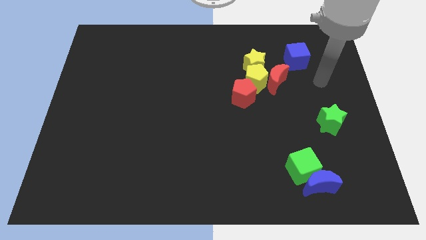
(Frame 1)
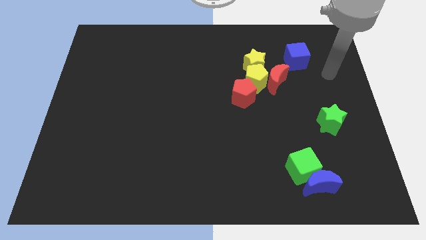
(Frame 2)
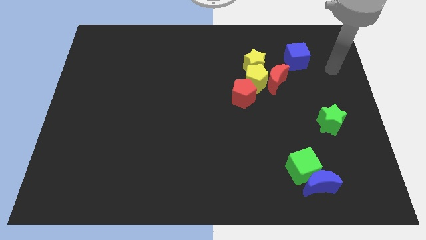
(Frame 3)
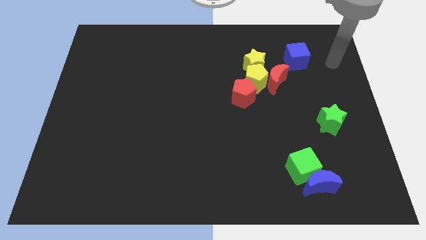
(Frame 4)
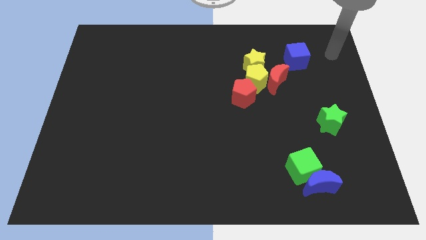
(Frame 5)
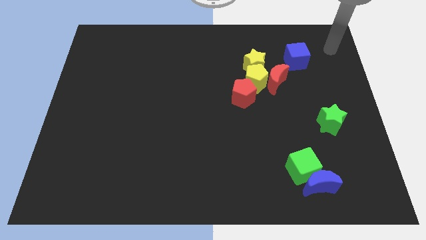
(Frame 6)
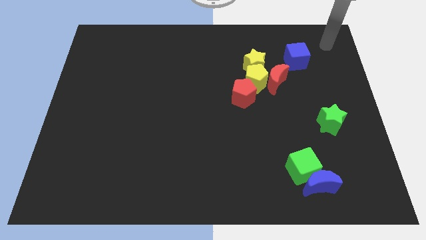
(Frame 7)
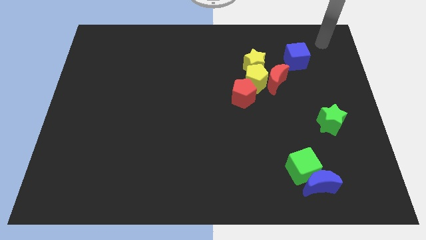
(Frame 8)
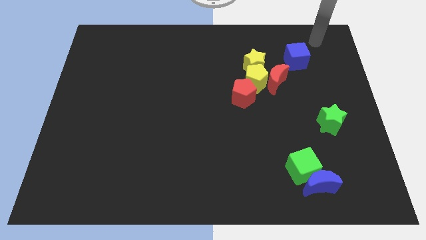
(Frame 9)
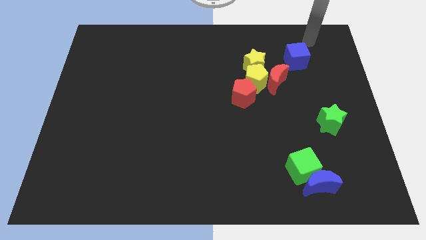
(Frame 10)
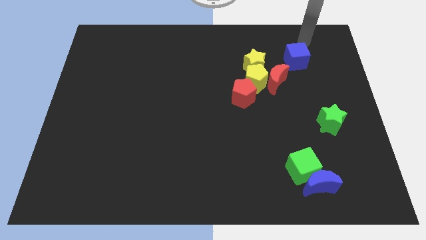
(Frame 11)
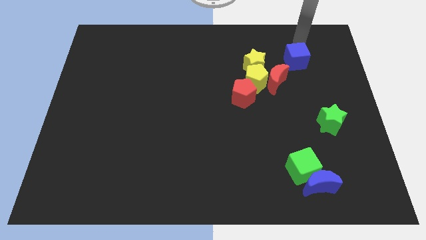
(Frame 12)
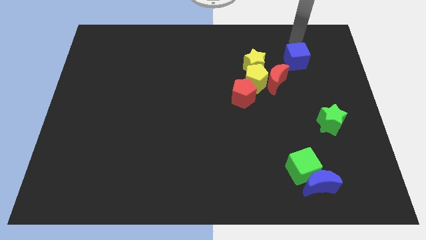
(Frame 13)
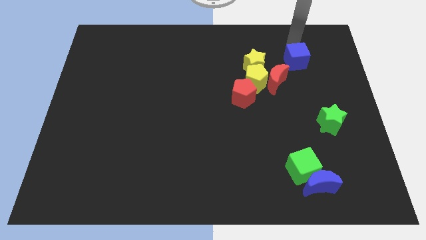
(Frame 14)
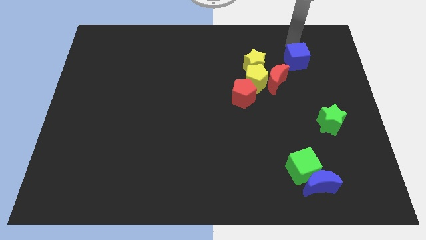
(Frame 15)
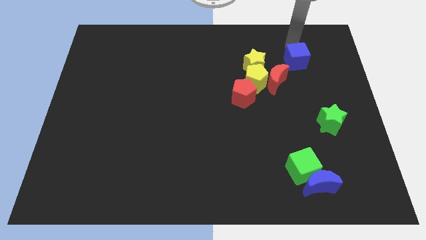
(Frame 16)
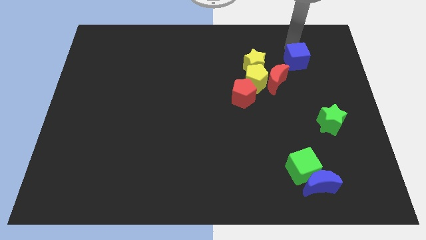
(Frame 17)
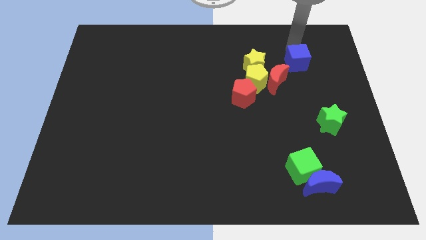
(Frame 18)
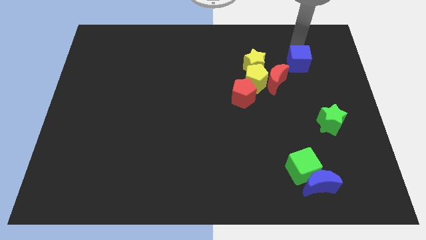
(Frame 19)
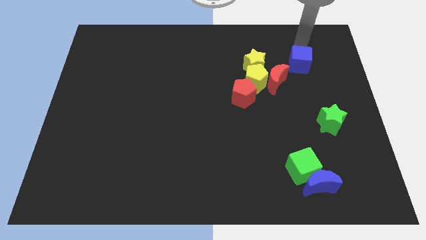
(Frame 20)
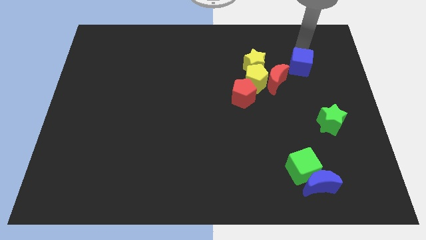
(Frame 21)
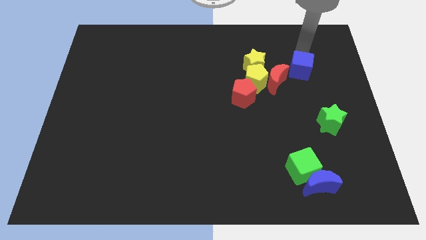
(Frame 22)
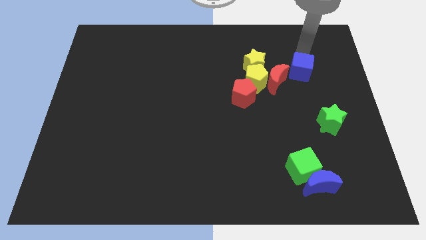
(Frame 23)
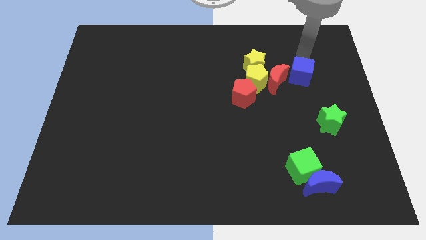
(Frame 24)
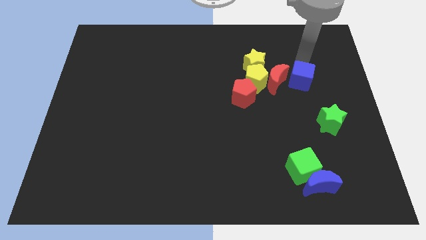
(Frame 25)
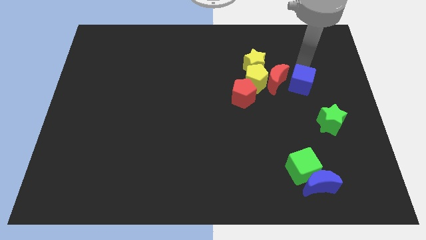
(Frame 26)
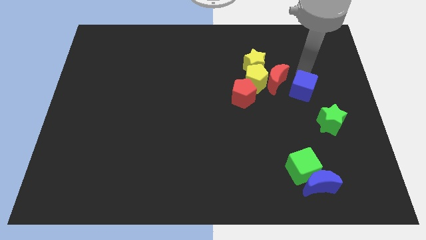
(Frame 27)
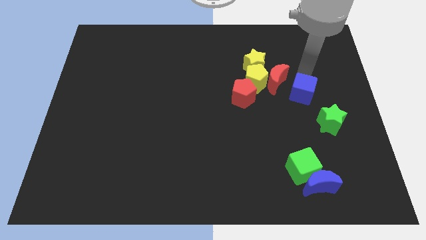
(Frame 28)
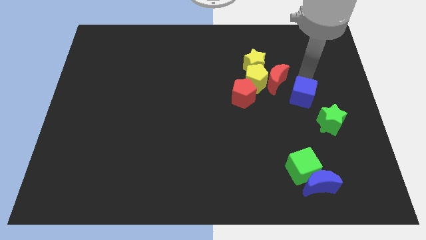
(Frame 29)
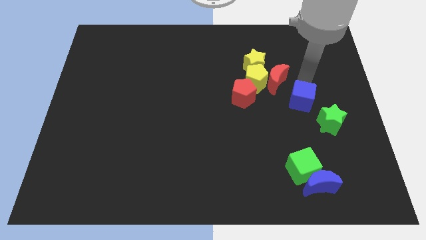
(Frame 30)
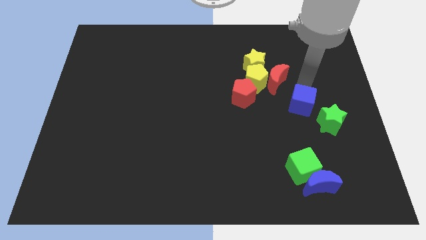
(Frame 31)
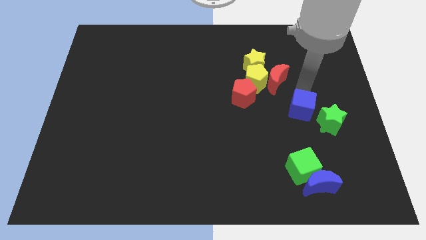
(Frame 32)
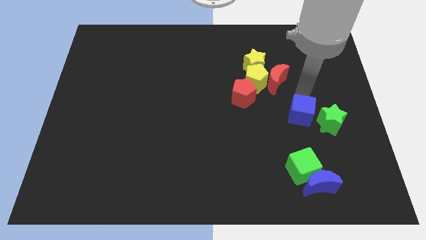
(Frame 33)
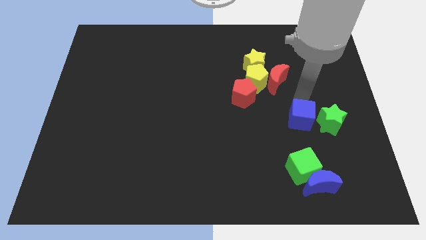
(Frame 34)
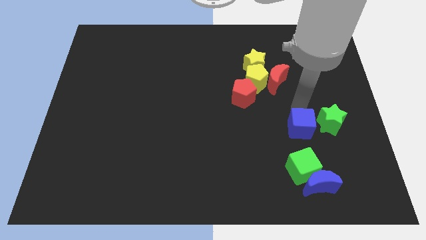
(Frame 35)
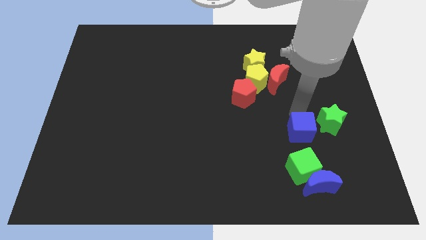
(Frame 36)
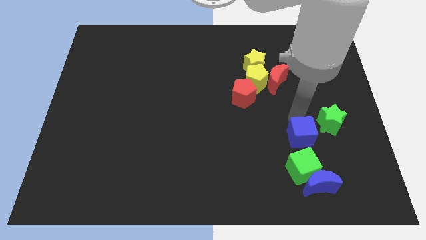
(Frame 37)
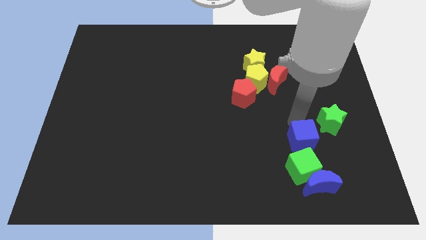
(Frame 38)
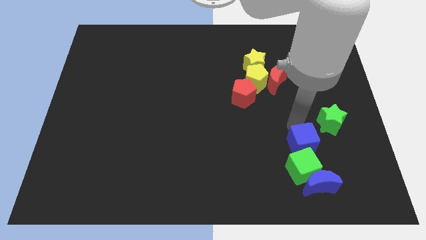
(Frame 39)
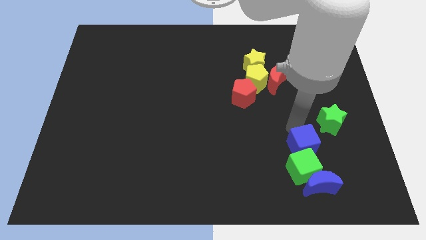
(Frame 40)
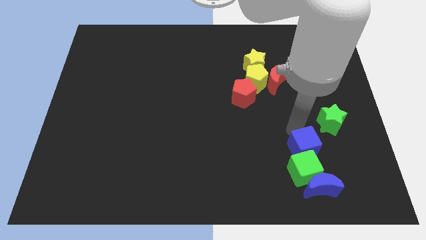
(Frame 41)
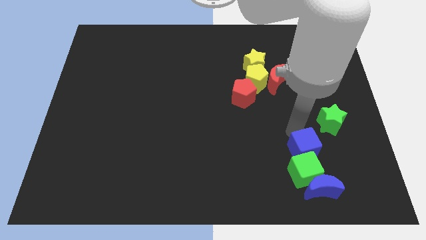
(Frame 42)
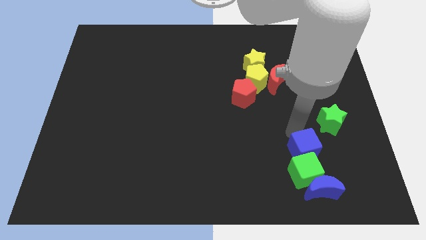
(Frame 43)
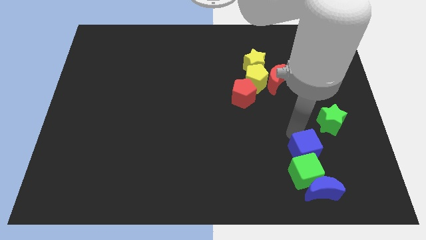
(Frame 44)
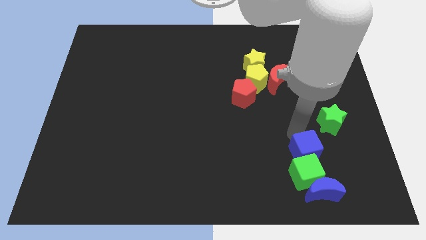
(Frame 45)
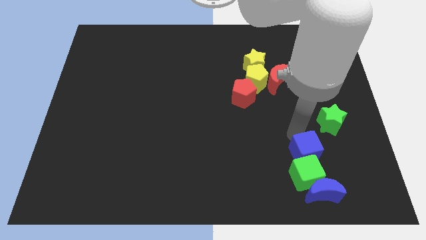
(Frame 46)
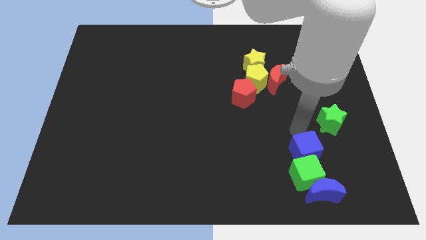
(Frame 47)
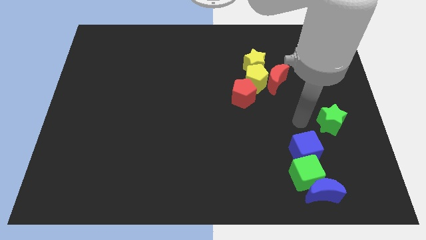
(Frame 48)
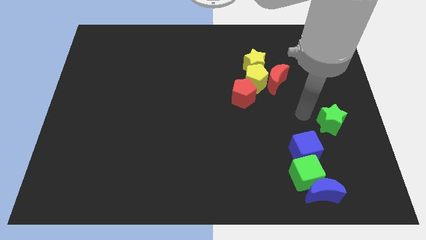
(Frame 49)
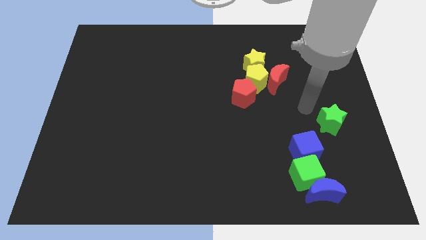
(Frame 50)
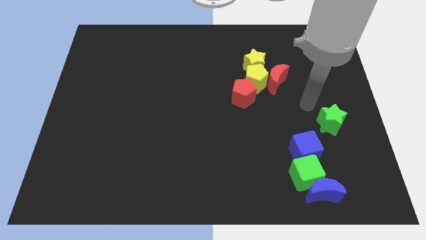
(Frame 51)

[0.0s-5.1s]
push the green cube downwards slightly with the blue cube

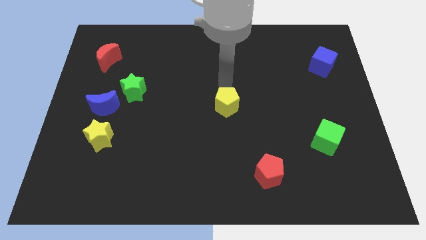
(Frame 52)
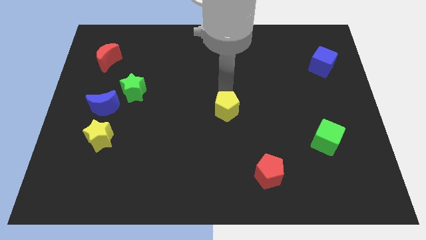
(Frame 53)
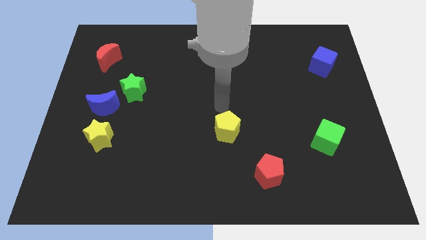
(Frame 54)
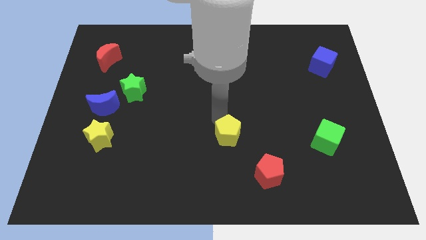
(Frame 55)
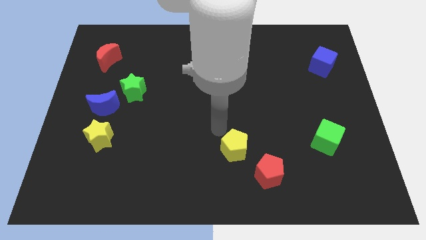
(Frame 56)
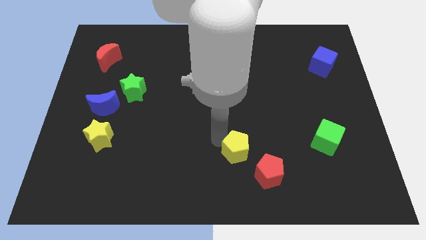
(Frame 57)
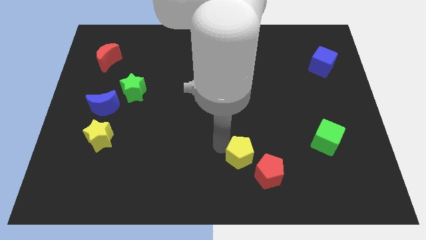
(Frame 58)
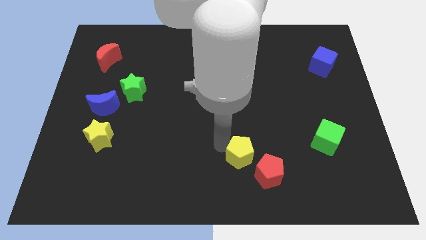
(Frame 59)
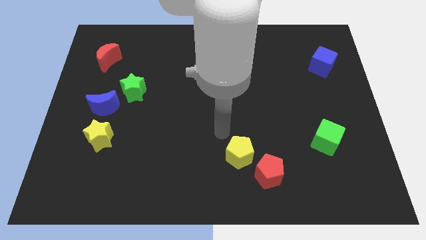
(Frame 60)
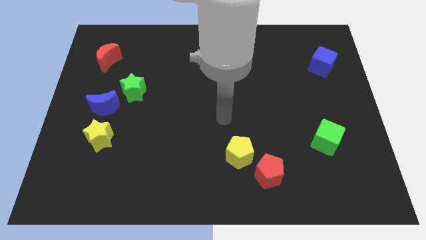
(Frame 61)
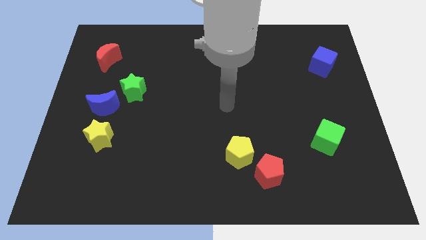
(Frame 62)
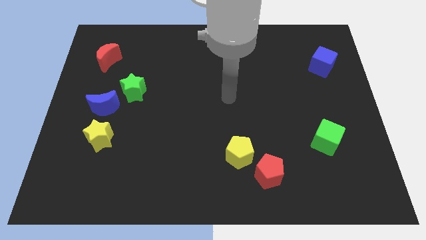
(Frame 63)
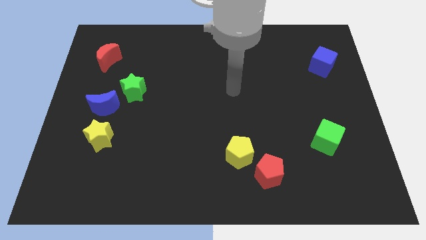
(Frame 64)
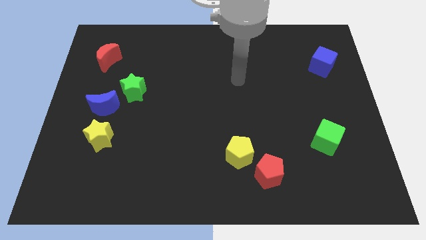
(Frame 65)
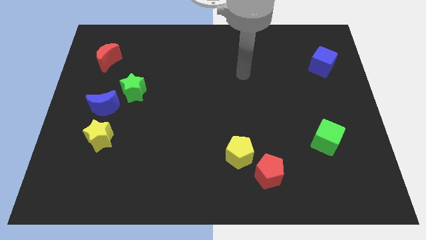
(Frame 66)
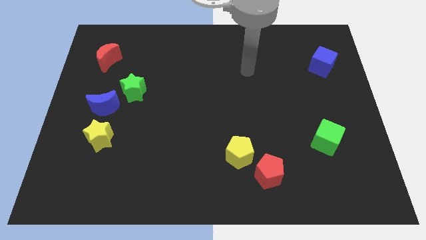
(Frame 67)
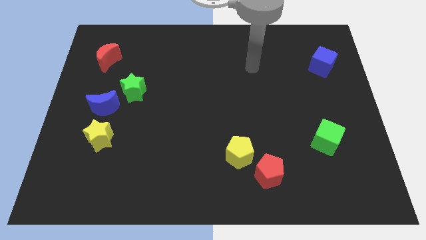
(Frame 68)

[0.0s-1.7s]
move the yellow pentagon close to red pentagon

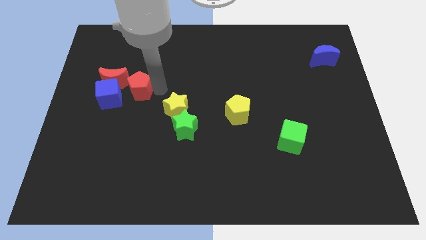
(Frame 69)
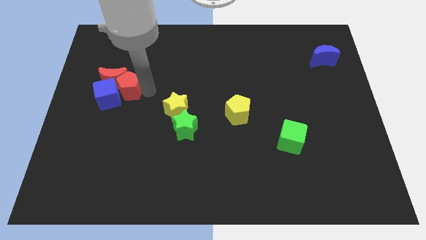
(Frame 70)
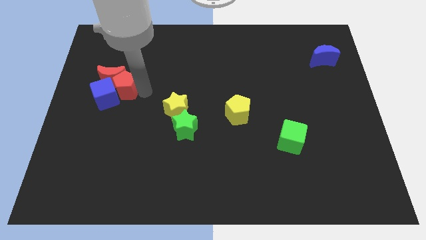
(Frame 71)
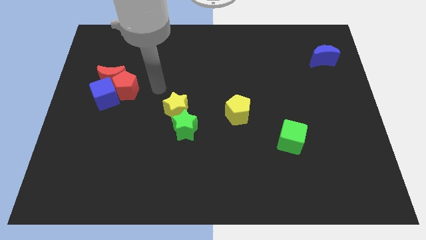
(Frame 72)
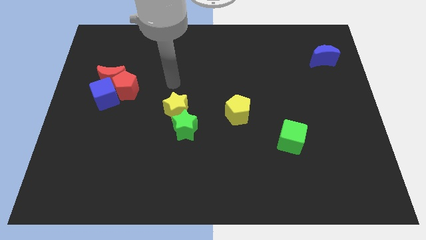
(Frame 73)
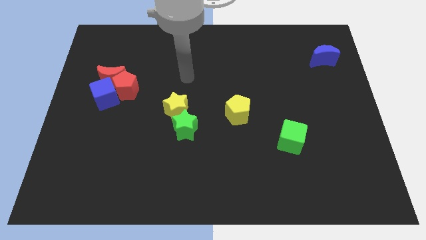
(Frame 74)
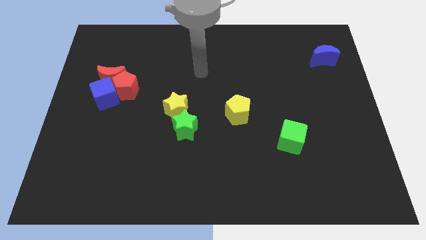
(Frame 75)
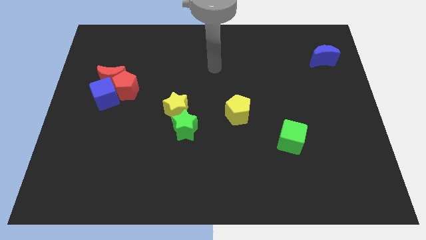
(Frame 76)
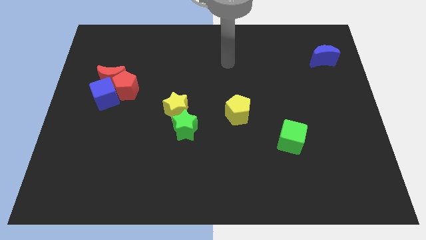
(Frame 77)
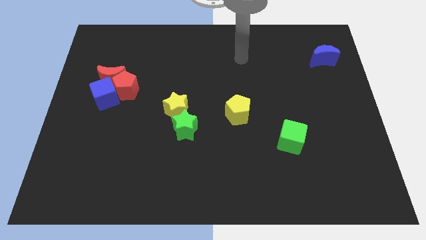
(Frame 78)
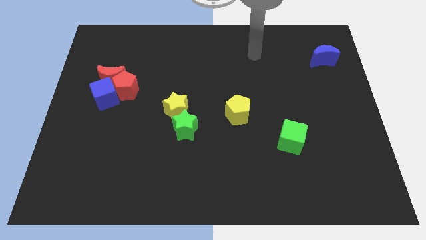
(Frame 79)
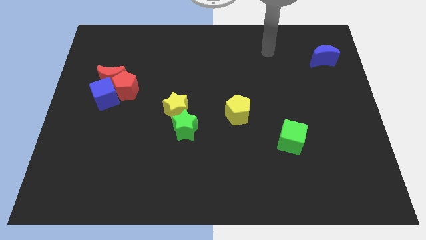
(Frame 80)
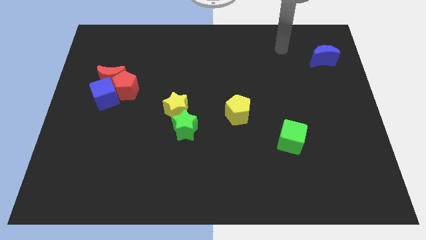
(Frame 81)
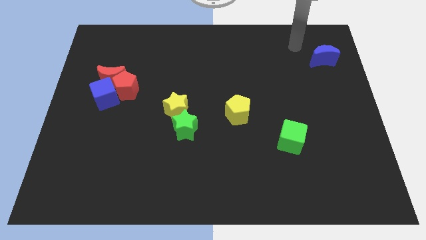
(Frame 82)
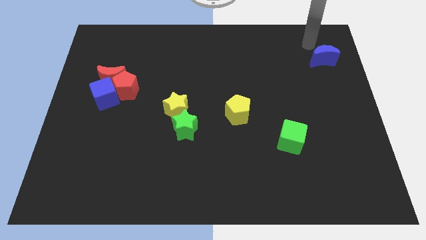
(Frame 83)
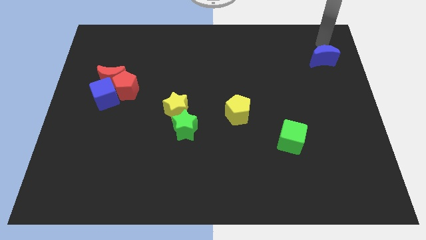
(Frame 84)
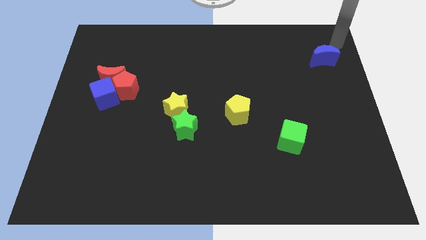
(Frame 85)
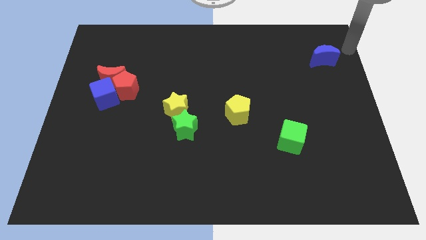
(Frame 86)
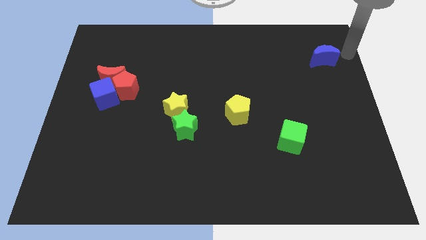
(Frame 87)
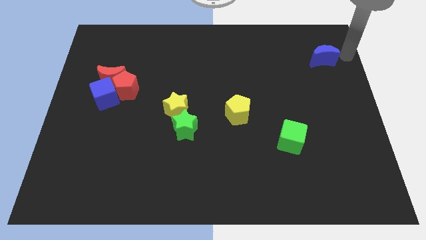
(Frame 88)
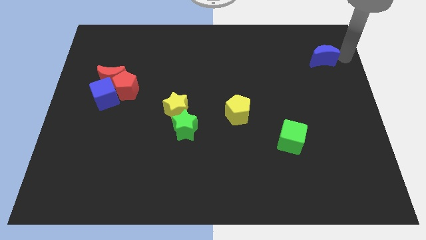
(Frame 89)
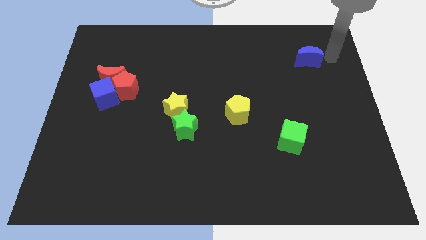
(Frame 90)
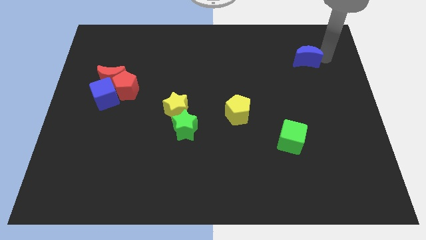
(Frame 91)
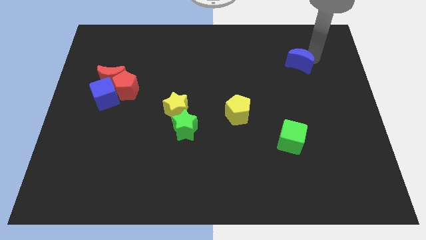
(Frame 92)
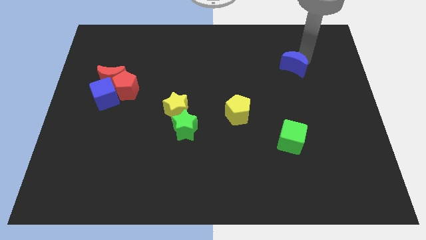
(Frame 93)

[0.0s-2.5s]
push blue crescent above green cube
